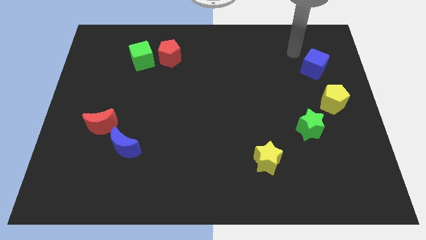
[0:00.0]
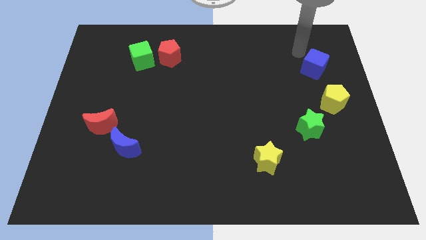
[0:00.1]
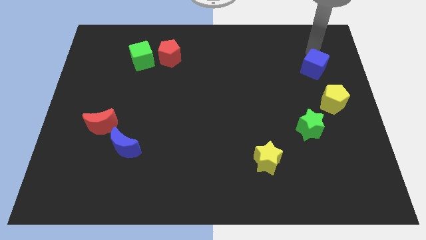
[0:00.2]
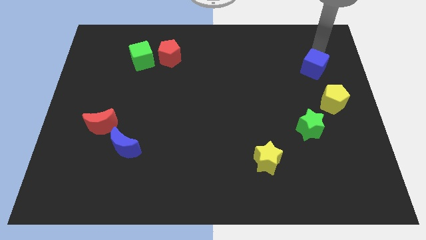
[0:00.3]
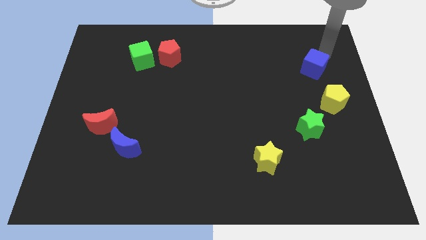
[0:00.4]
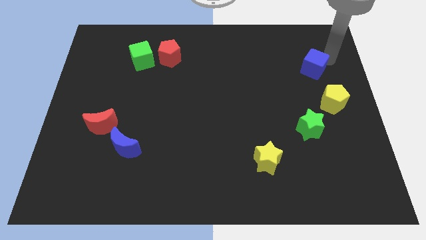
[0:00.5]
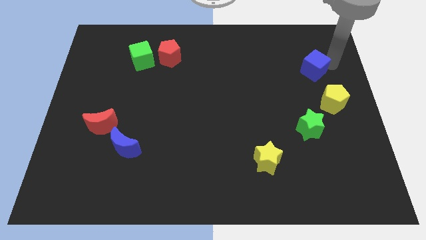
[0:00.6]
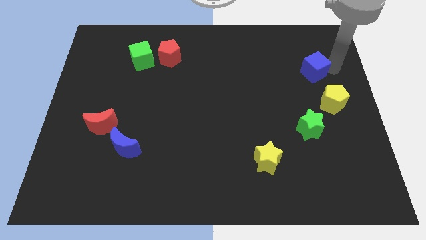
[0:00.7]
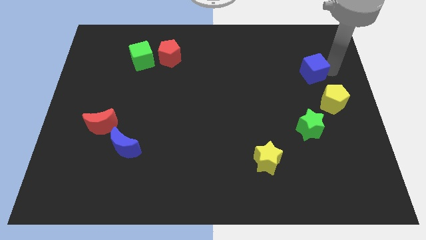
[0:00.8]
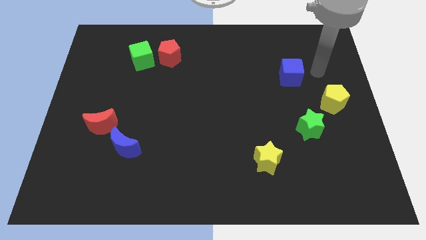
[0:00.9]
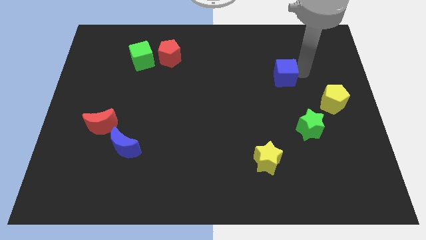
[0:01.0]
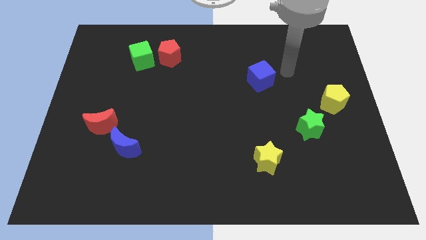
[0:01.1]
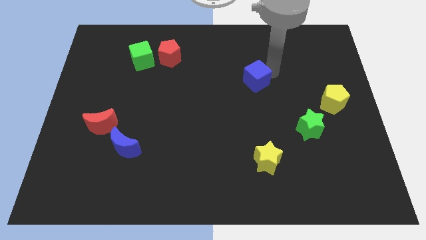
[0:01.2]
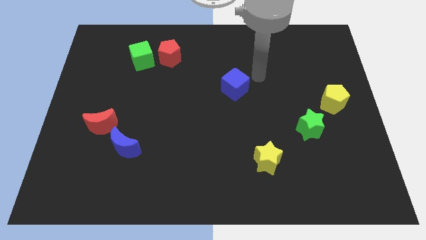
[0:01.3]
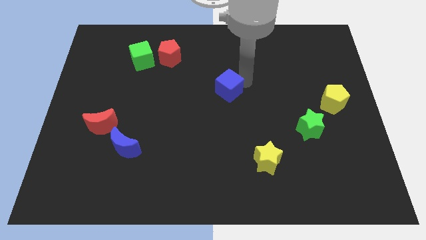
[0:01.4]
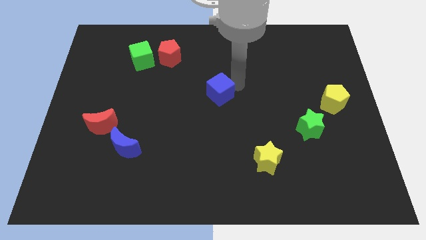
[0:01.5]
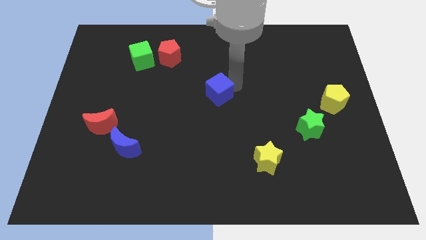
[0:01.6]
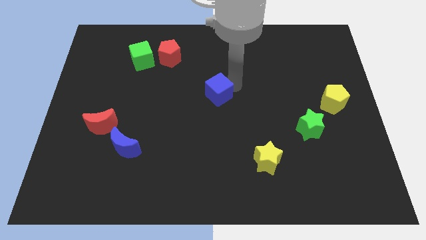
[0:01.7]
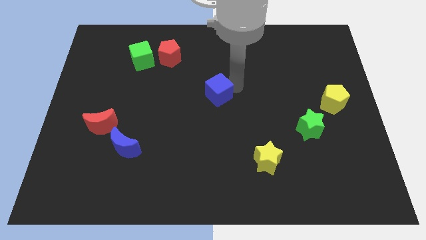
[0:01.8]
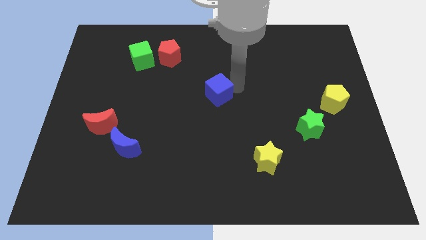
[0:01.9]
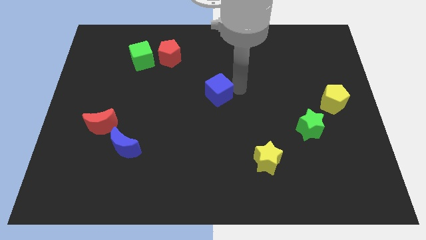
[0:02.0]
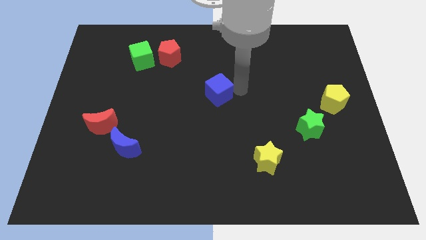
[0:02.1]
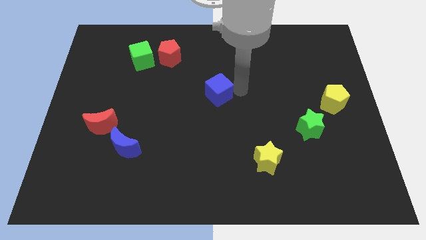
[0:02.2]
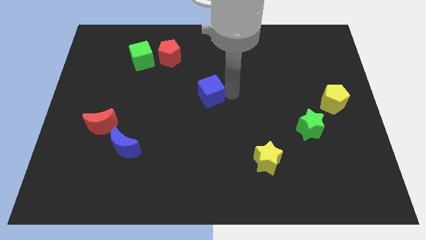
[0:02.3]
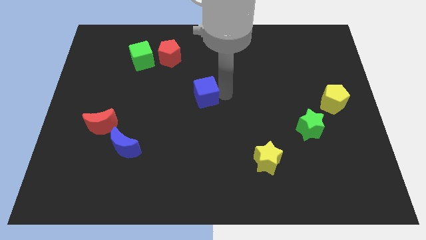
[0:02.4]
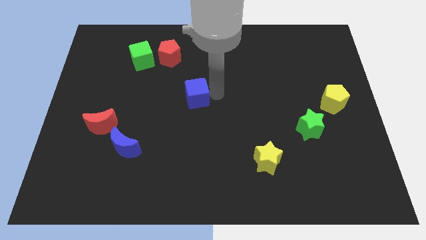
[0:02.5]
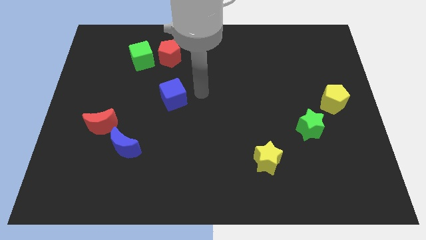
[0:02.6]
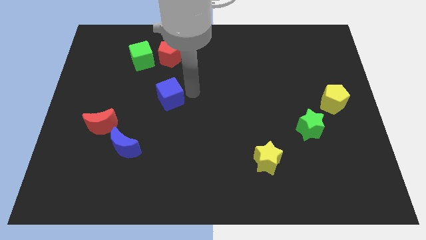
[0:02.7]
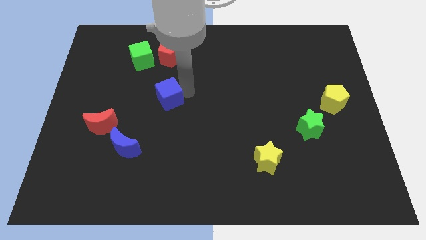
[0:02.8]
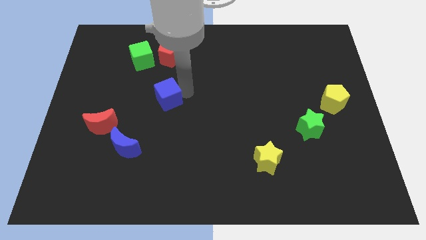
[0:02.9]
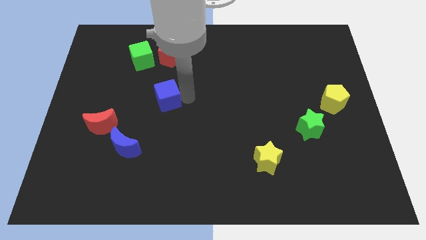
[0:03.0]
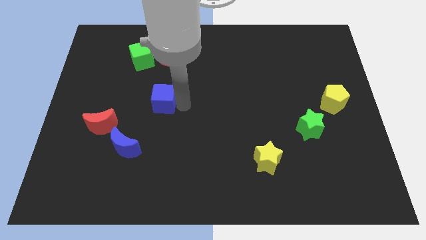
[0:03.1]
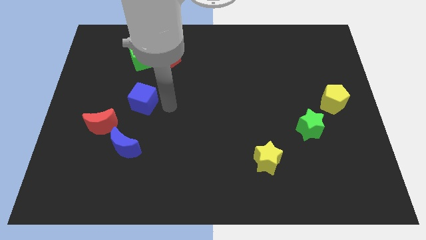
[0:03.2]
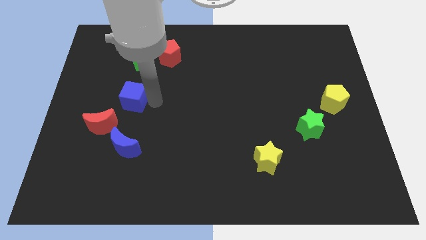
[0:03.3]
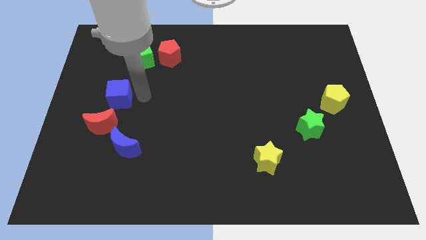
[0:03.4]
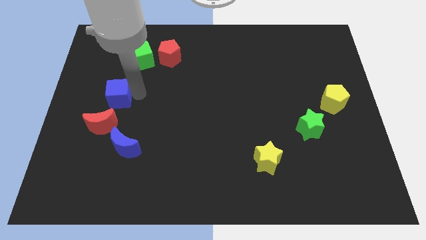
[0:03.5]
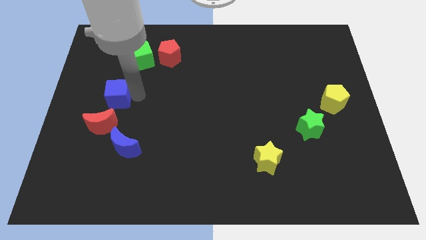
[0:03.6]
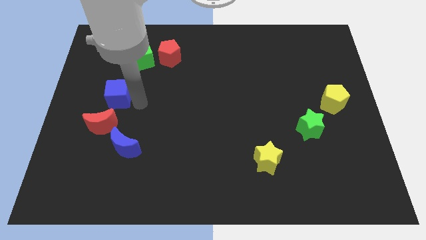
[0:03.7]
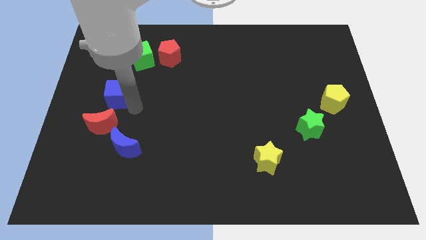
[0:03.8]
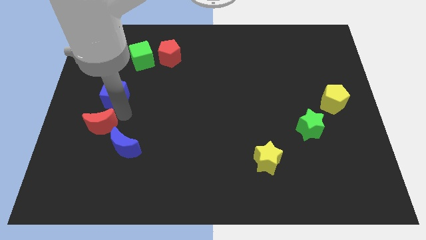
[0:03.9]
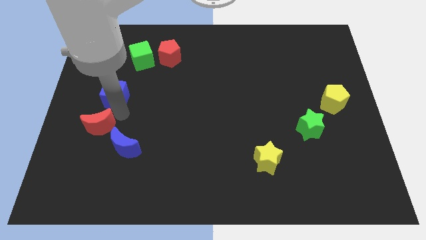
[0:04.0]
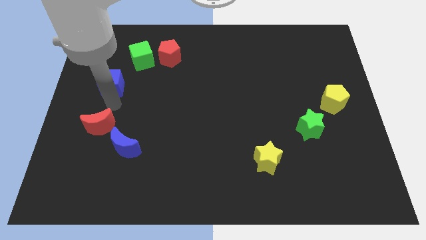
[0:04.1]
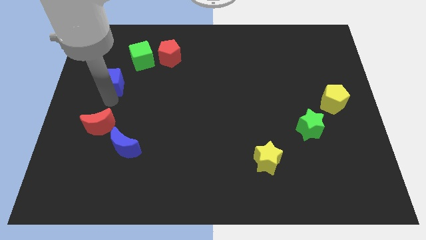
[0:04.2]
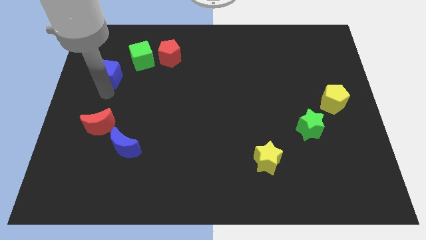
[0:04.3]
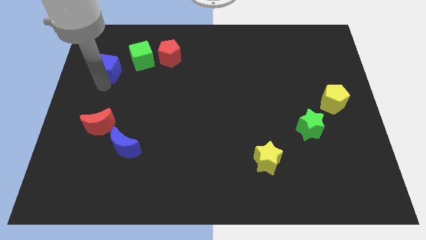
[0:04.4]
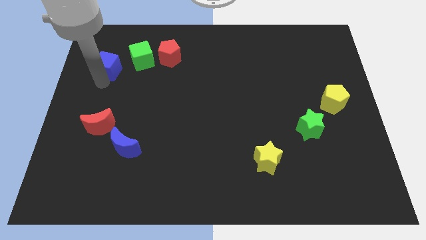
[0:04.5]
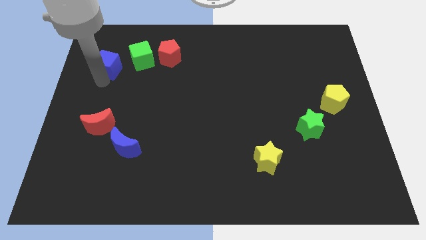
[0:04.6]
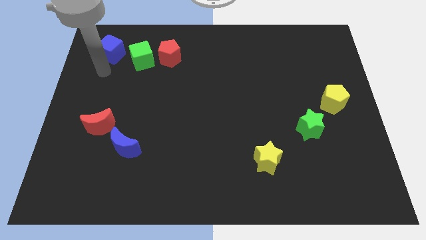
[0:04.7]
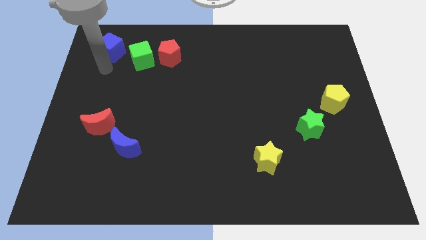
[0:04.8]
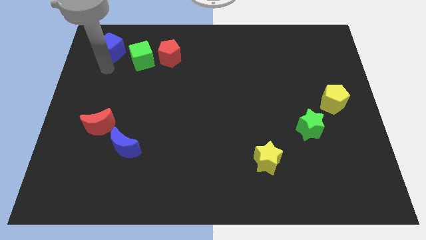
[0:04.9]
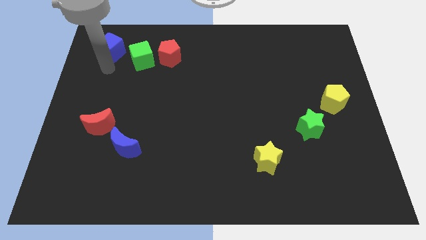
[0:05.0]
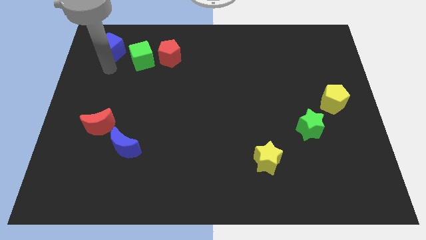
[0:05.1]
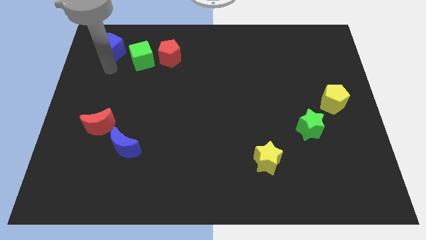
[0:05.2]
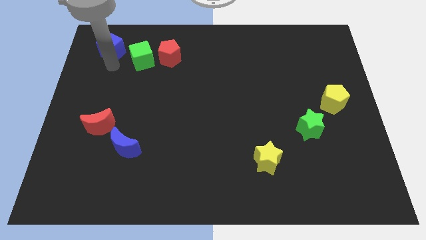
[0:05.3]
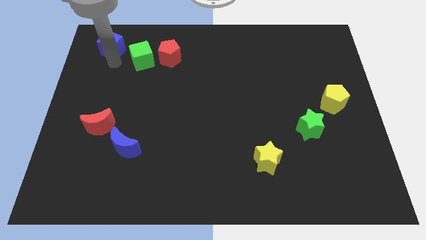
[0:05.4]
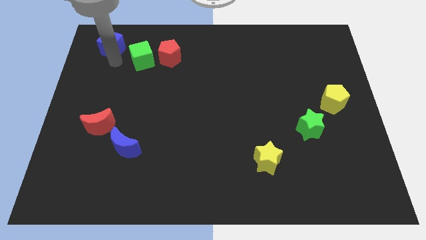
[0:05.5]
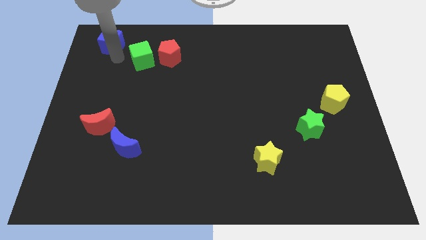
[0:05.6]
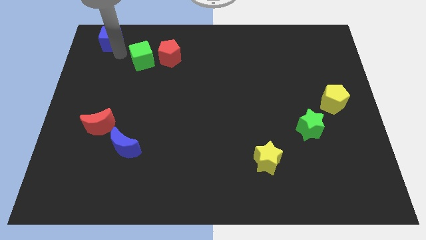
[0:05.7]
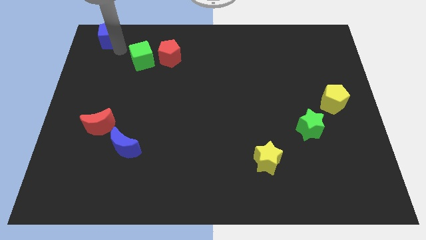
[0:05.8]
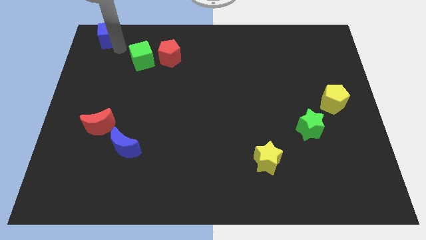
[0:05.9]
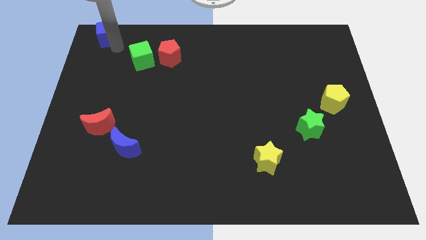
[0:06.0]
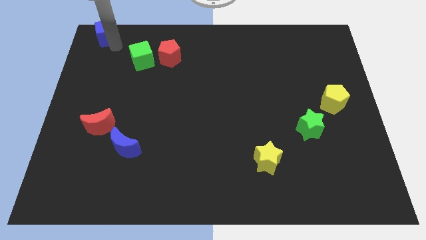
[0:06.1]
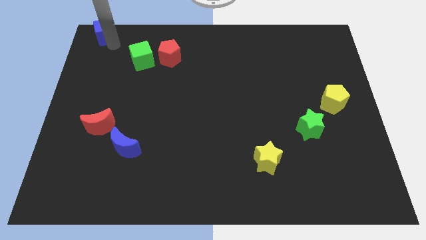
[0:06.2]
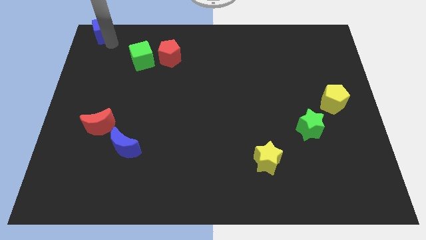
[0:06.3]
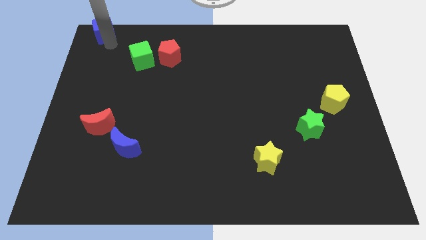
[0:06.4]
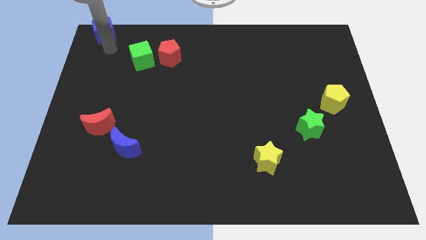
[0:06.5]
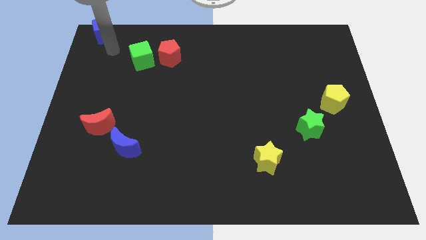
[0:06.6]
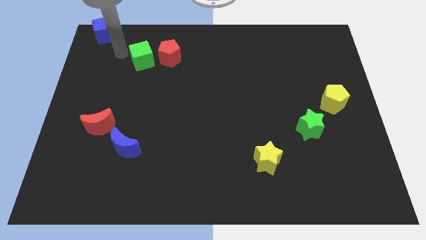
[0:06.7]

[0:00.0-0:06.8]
place the blue cube to the top left of the board

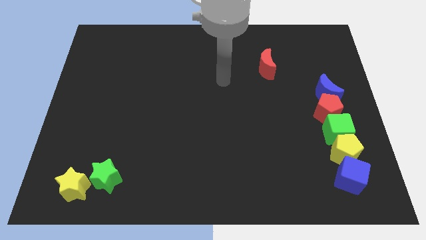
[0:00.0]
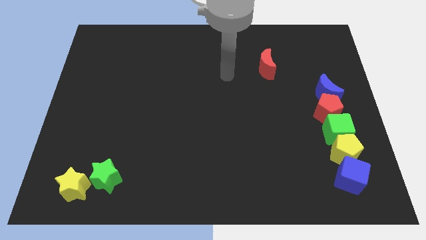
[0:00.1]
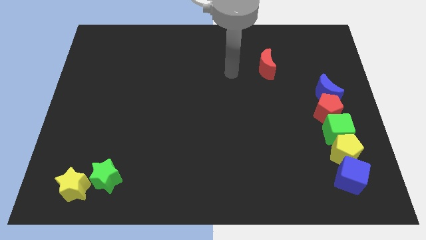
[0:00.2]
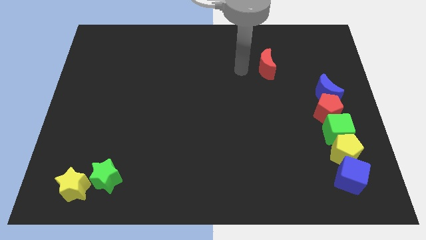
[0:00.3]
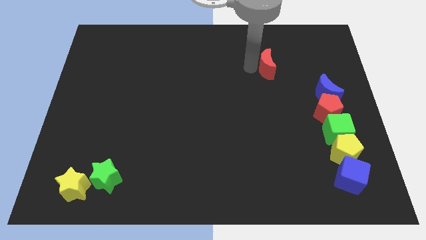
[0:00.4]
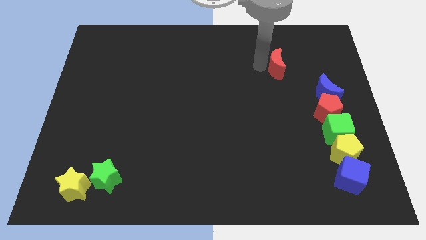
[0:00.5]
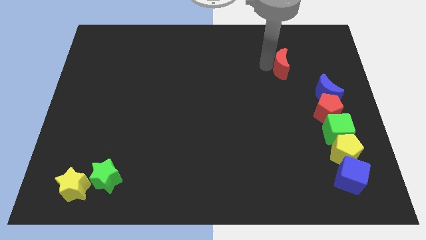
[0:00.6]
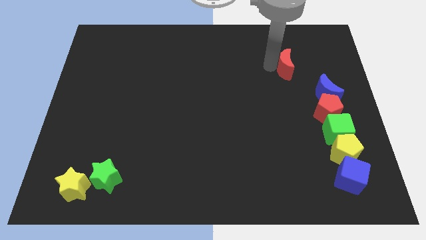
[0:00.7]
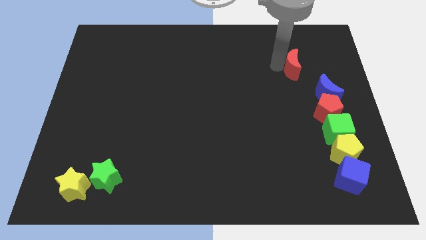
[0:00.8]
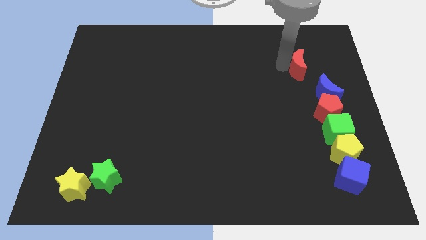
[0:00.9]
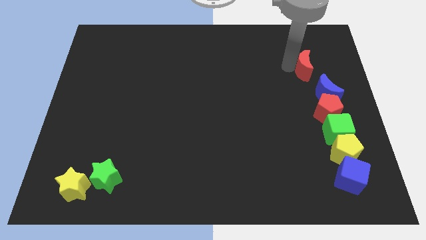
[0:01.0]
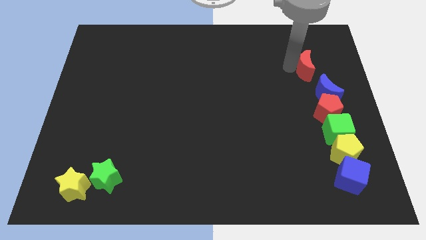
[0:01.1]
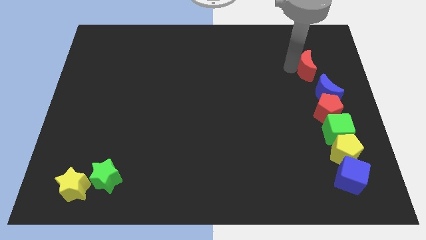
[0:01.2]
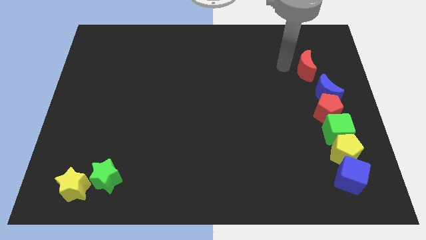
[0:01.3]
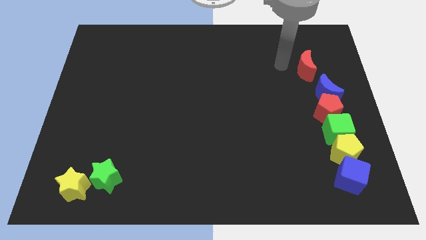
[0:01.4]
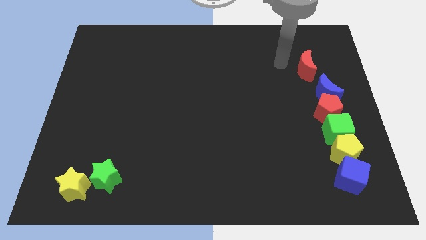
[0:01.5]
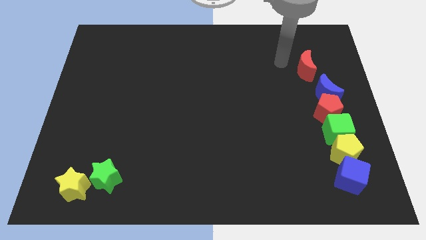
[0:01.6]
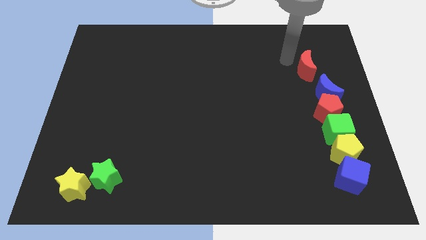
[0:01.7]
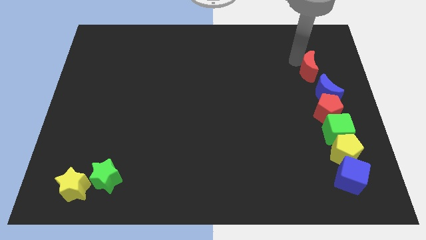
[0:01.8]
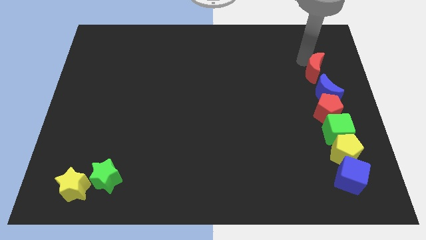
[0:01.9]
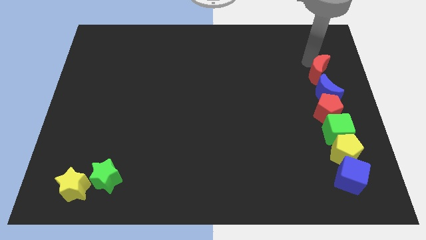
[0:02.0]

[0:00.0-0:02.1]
place the red moon vertically above the blue moon
